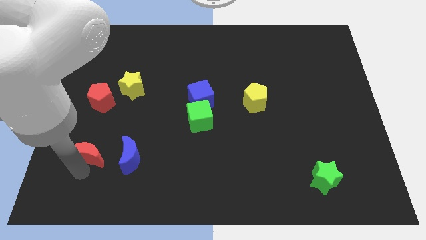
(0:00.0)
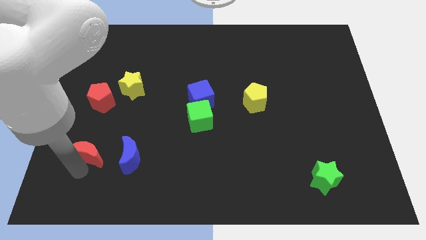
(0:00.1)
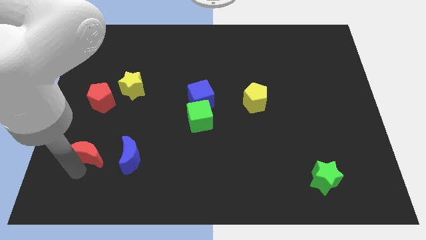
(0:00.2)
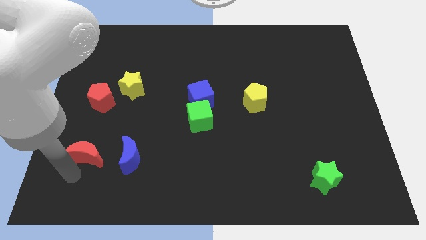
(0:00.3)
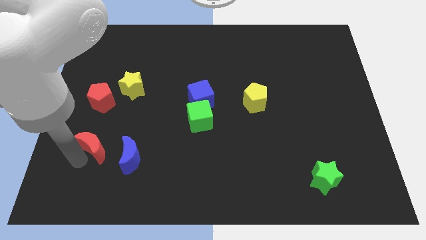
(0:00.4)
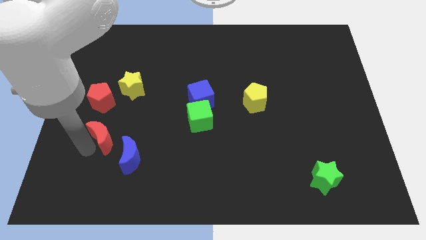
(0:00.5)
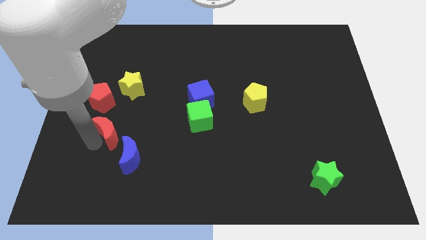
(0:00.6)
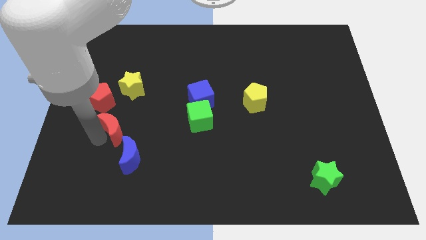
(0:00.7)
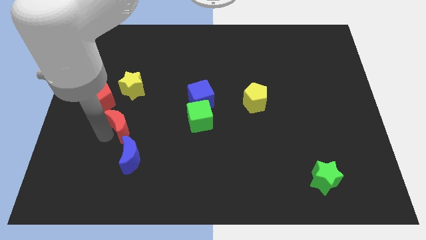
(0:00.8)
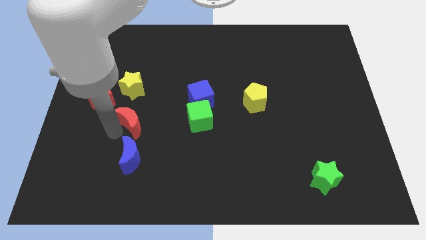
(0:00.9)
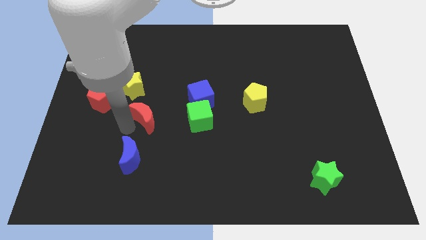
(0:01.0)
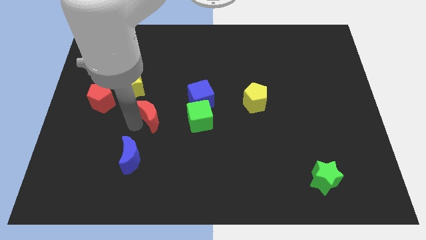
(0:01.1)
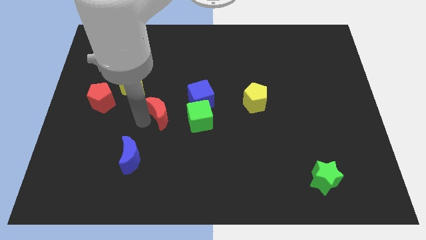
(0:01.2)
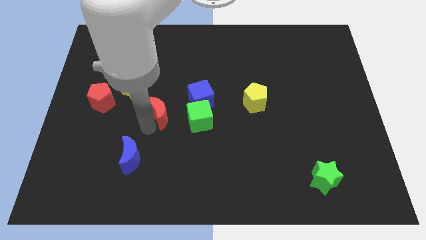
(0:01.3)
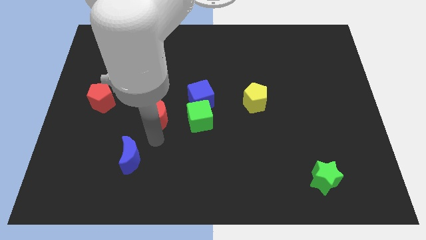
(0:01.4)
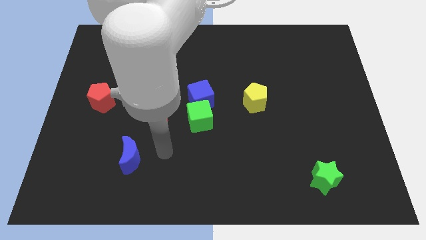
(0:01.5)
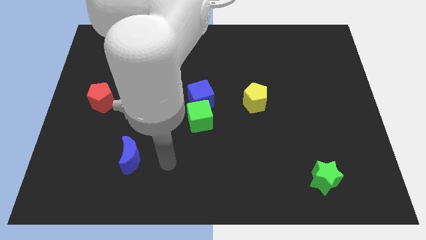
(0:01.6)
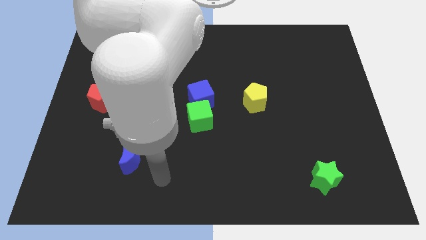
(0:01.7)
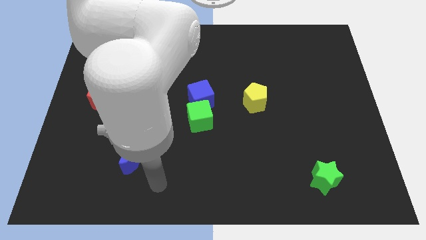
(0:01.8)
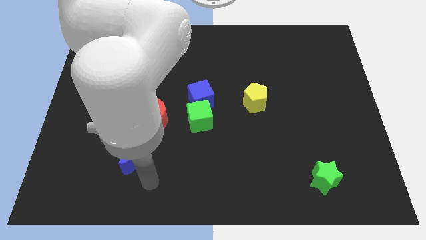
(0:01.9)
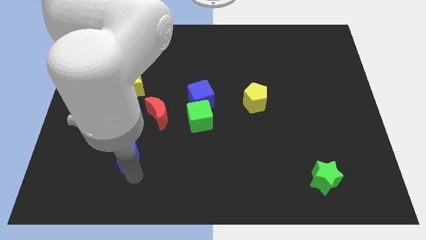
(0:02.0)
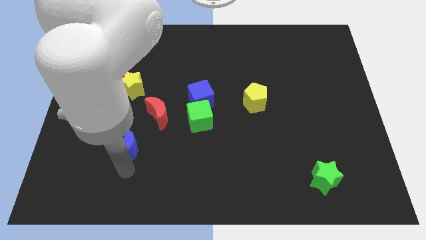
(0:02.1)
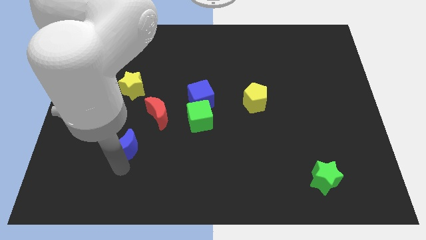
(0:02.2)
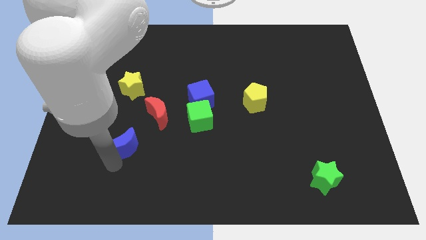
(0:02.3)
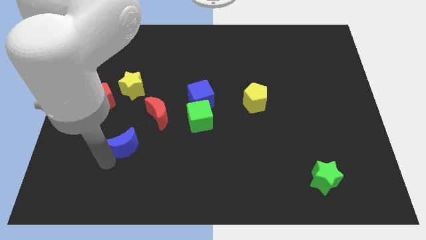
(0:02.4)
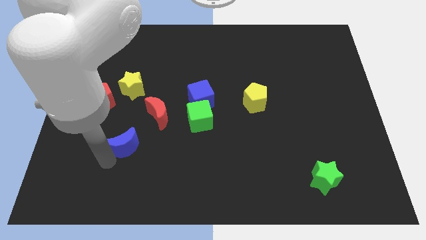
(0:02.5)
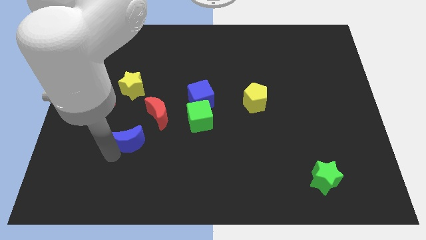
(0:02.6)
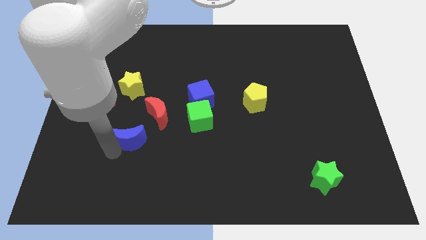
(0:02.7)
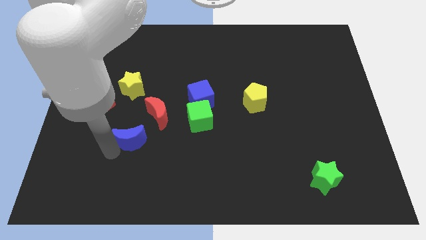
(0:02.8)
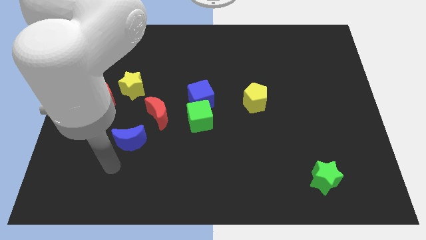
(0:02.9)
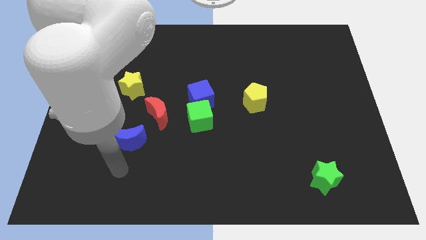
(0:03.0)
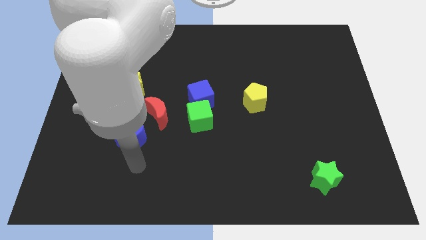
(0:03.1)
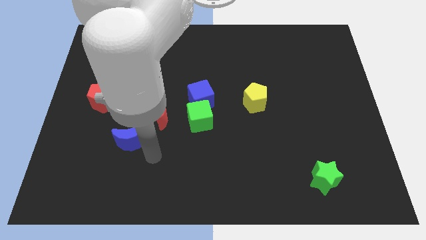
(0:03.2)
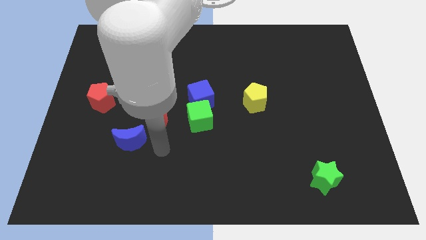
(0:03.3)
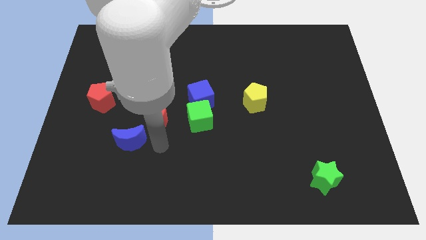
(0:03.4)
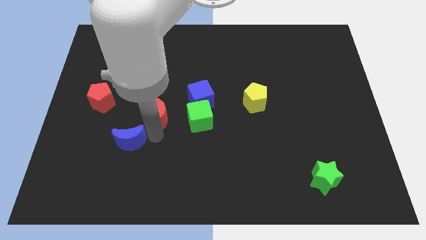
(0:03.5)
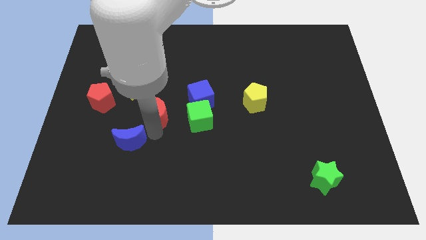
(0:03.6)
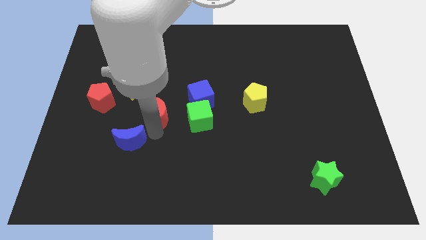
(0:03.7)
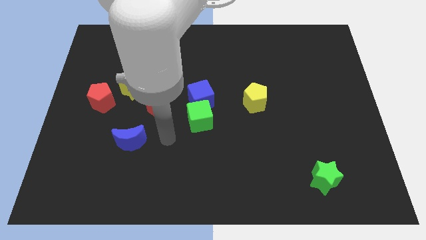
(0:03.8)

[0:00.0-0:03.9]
push red moon to the left of green cube

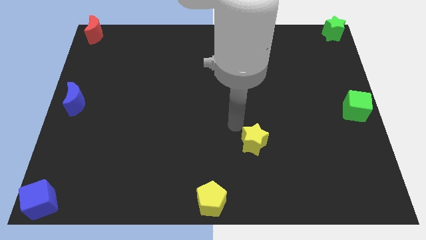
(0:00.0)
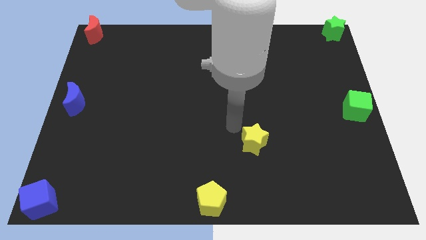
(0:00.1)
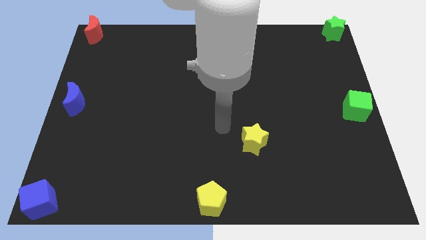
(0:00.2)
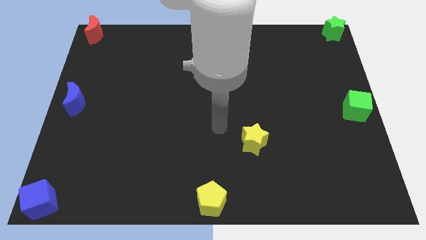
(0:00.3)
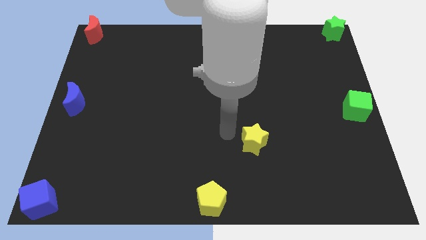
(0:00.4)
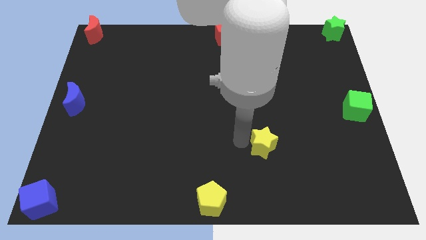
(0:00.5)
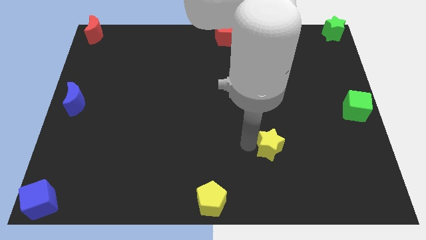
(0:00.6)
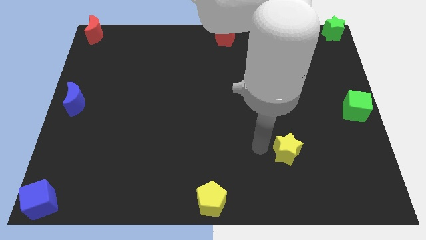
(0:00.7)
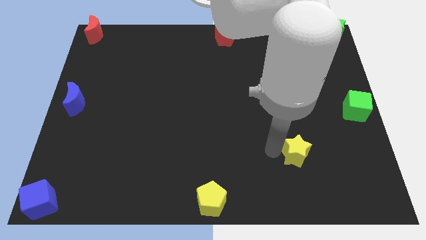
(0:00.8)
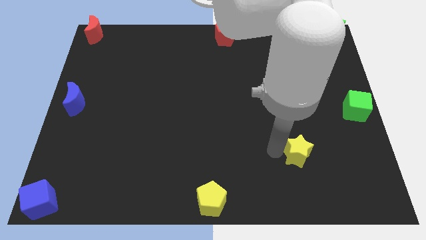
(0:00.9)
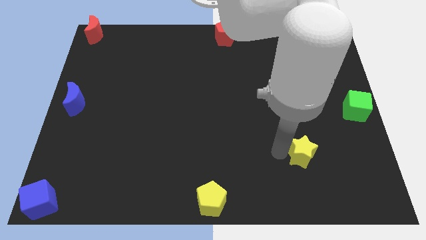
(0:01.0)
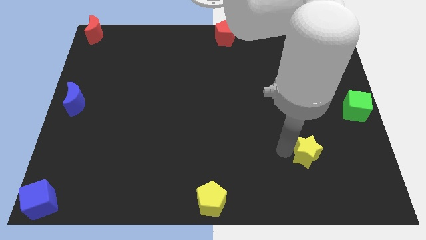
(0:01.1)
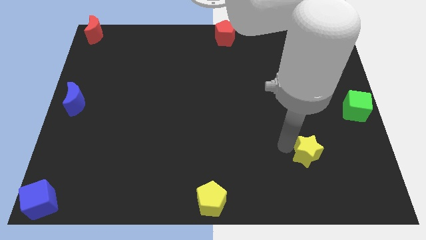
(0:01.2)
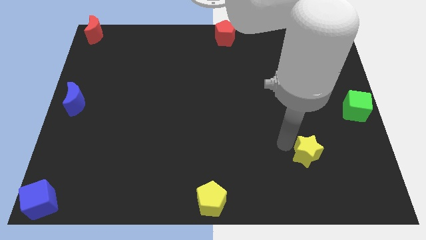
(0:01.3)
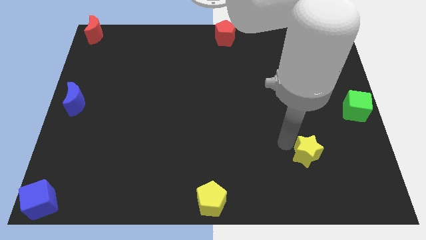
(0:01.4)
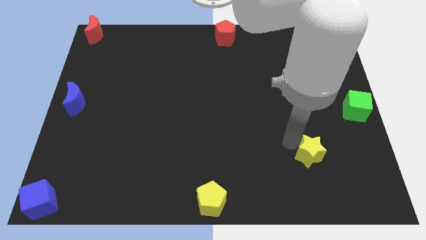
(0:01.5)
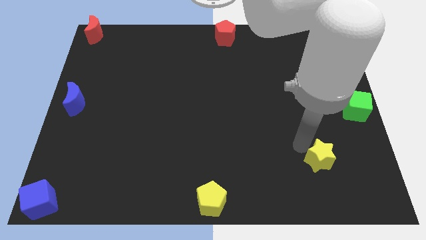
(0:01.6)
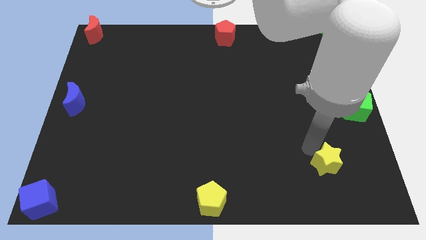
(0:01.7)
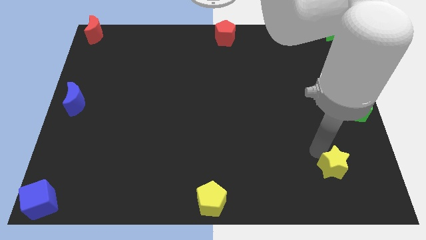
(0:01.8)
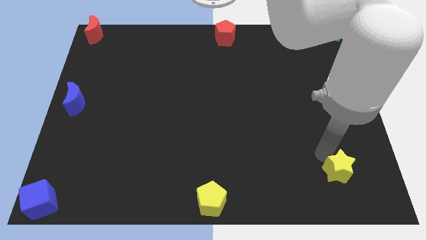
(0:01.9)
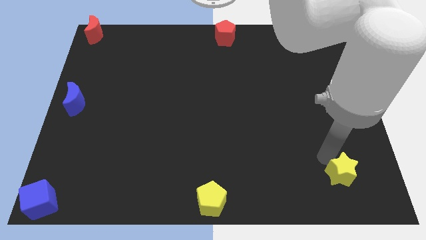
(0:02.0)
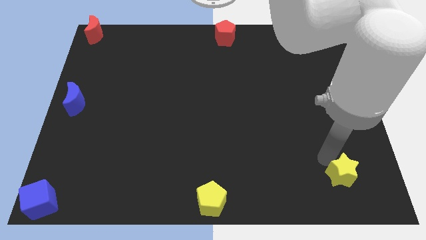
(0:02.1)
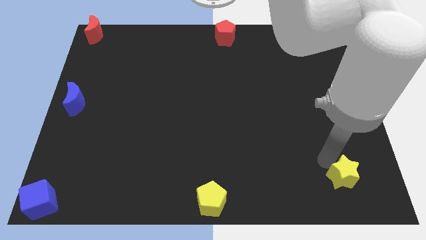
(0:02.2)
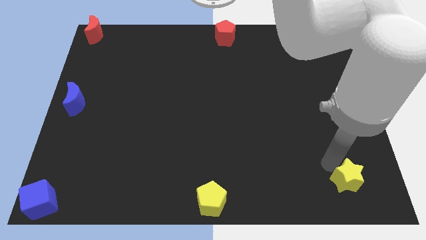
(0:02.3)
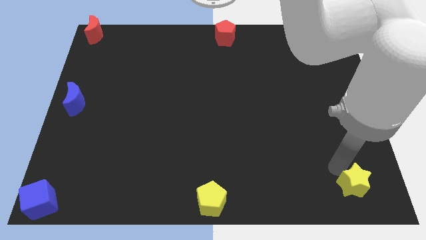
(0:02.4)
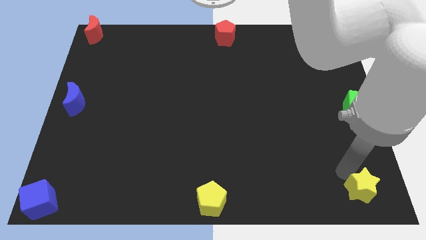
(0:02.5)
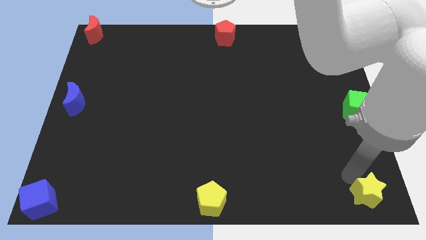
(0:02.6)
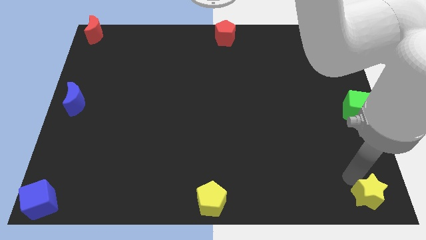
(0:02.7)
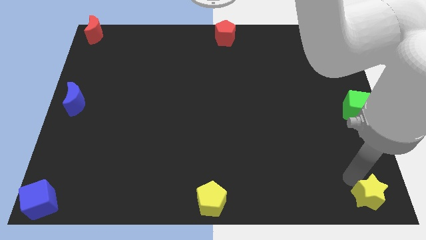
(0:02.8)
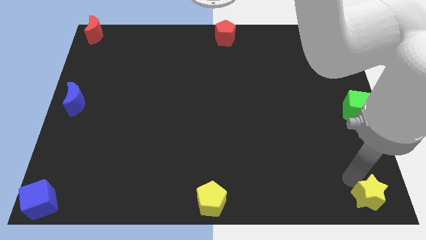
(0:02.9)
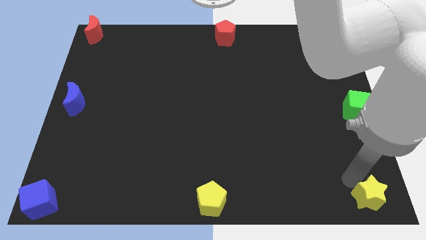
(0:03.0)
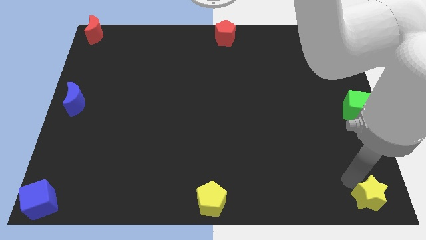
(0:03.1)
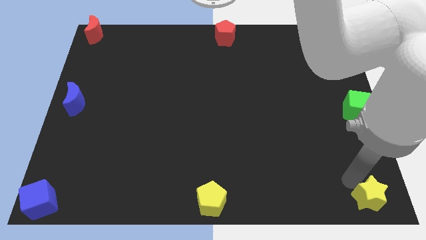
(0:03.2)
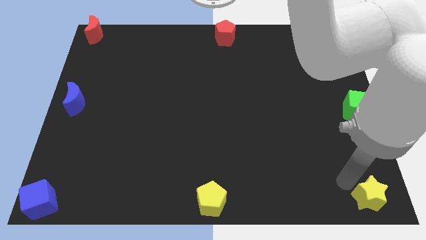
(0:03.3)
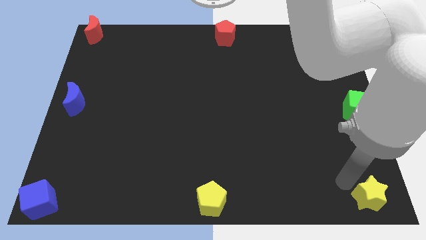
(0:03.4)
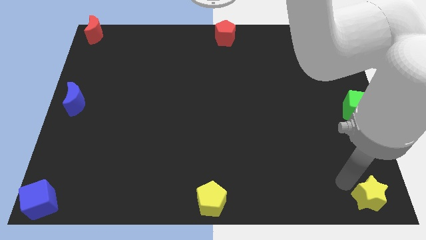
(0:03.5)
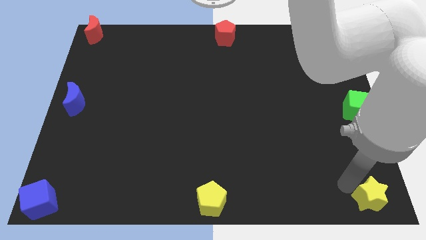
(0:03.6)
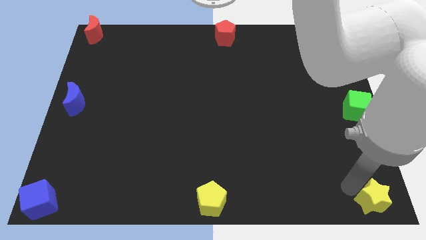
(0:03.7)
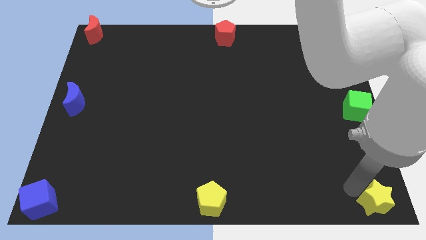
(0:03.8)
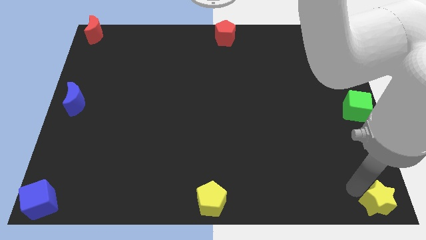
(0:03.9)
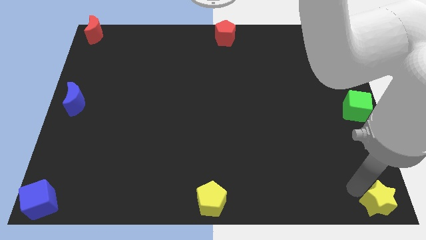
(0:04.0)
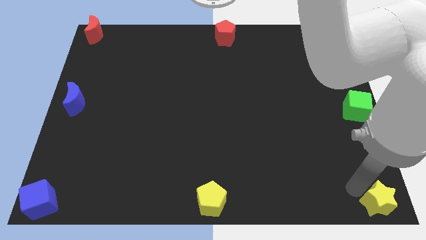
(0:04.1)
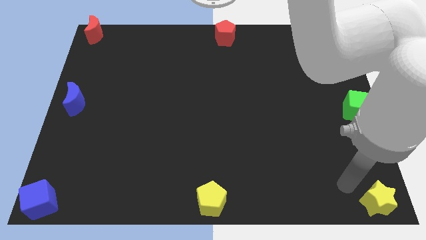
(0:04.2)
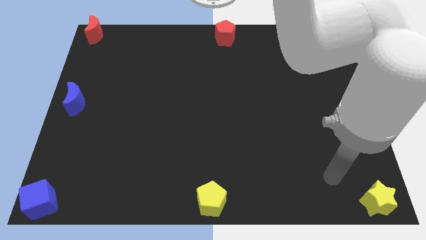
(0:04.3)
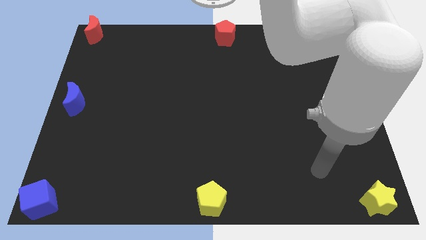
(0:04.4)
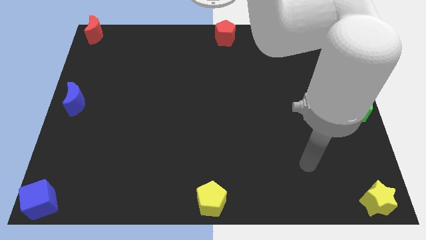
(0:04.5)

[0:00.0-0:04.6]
move yellow star to bottom right

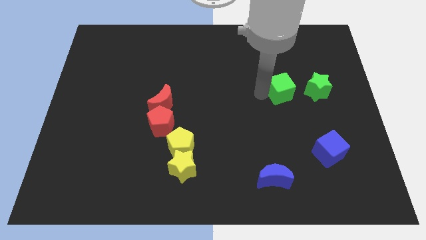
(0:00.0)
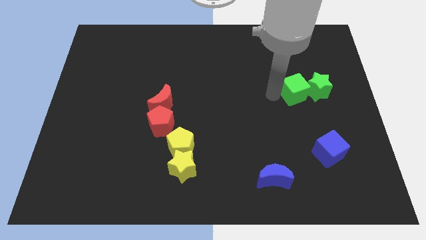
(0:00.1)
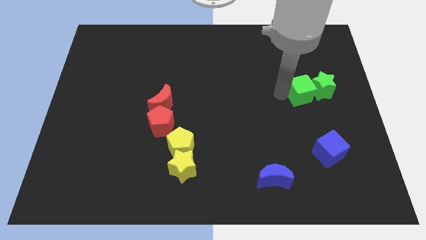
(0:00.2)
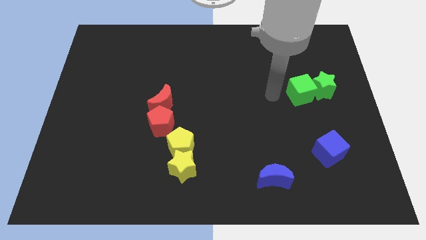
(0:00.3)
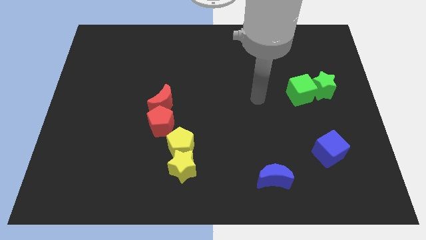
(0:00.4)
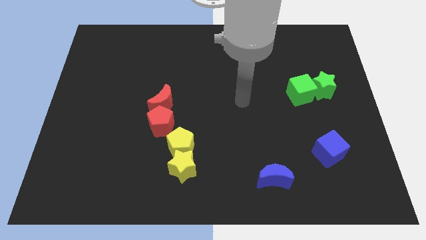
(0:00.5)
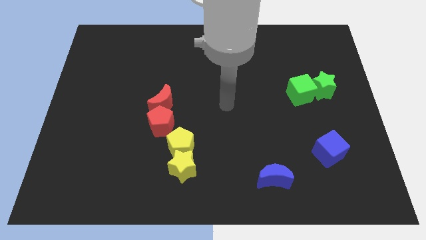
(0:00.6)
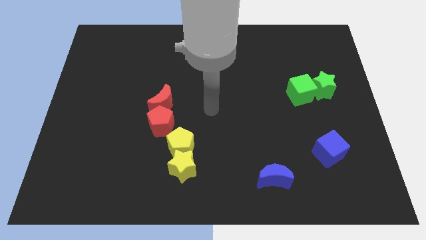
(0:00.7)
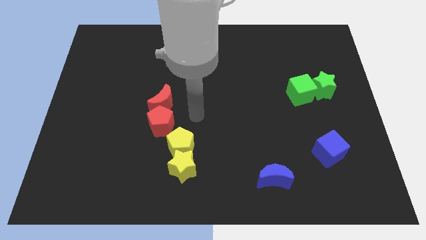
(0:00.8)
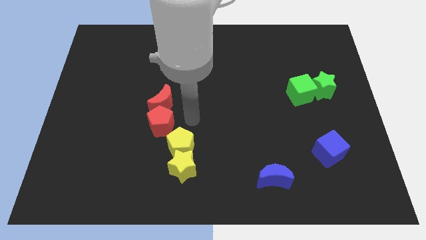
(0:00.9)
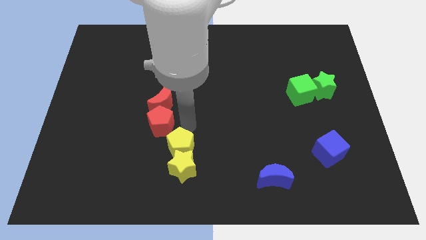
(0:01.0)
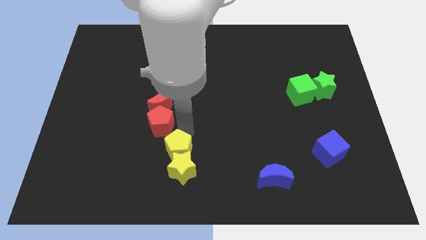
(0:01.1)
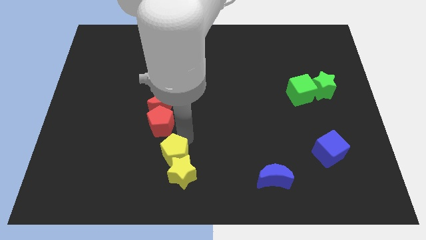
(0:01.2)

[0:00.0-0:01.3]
push the green cube to the left of the green star
